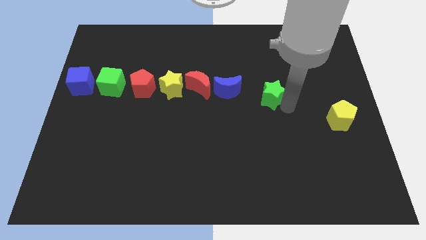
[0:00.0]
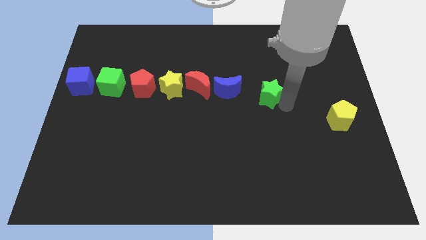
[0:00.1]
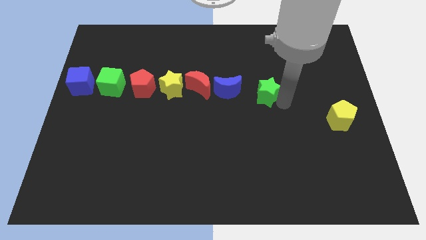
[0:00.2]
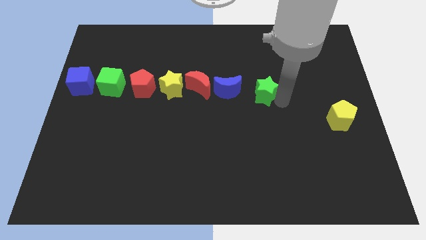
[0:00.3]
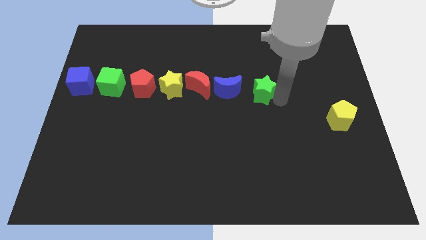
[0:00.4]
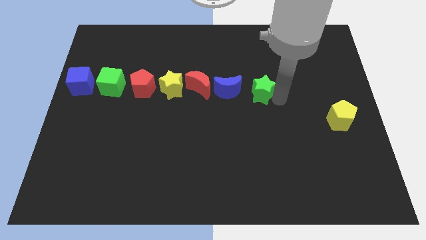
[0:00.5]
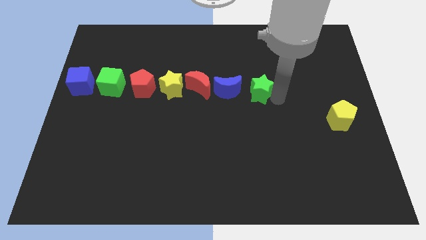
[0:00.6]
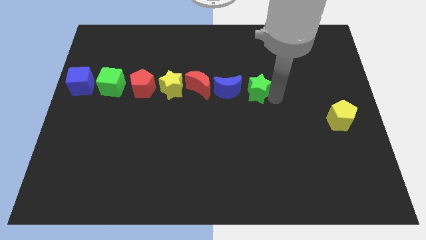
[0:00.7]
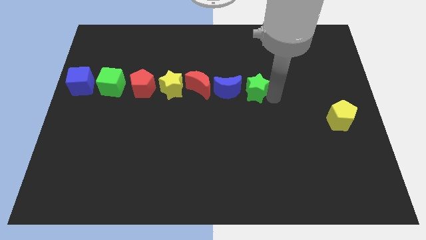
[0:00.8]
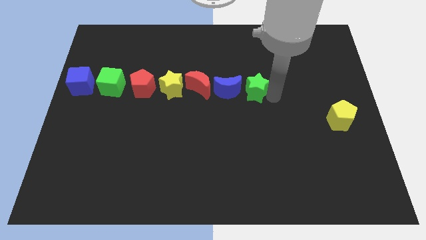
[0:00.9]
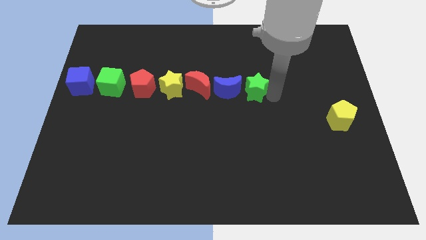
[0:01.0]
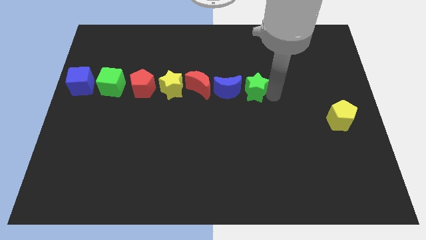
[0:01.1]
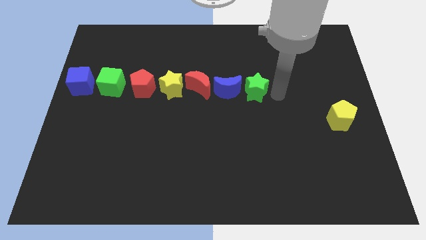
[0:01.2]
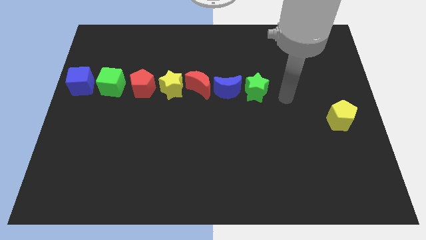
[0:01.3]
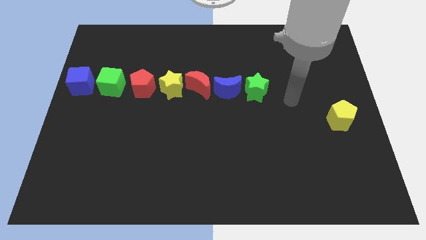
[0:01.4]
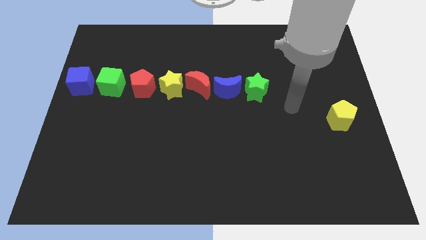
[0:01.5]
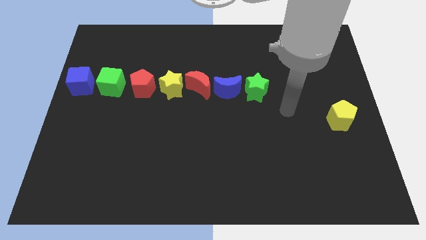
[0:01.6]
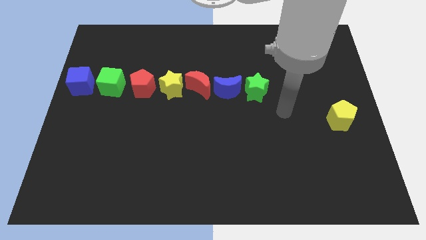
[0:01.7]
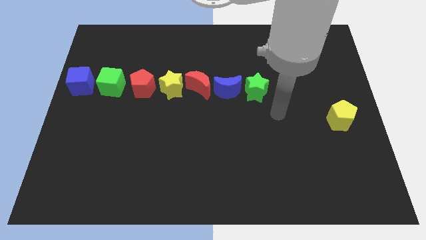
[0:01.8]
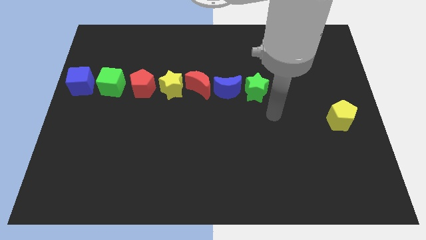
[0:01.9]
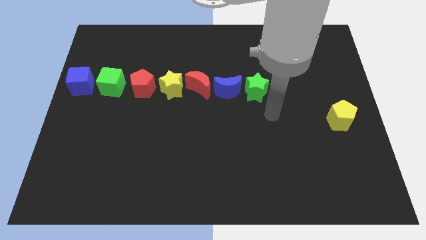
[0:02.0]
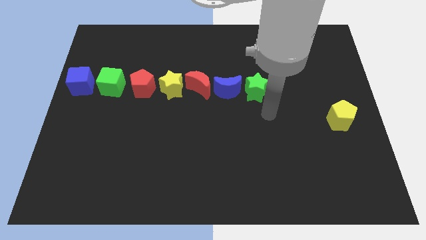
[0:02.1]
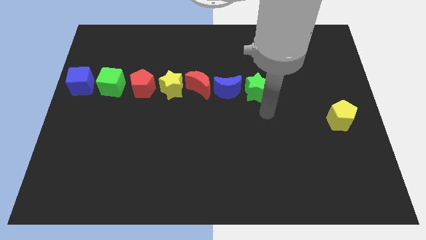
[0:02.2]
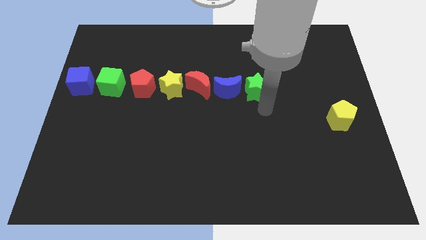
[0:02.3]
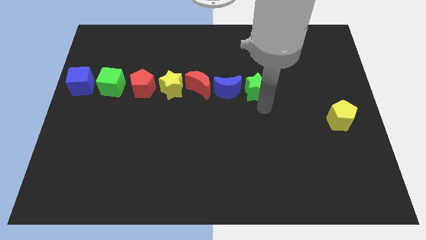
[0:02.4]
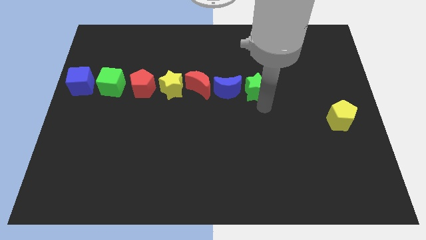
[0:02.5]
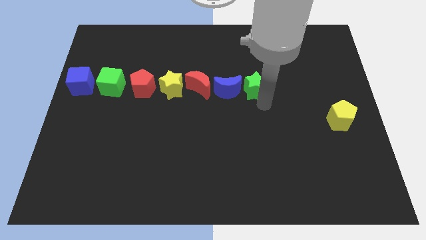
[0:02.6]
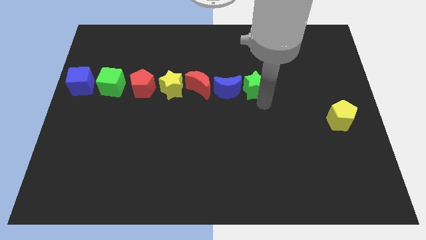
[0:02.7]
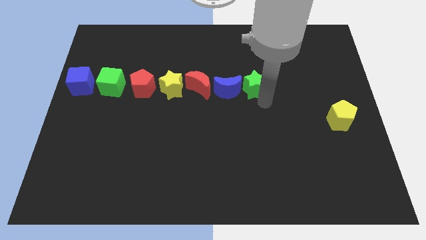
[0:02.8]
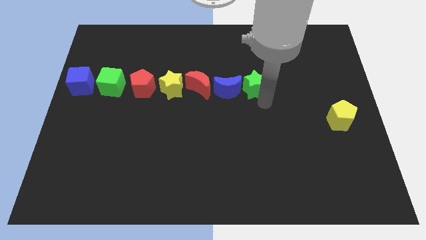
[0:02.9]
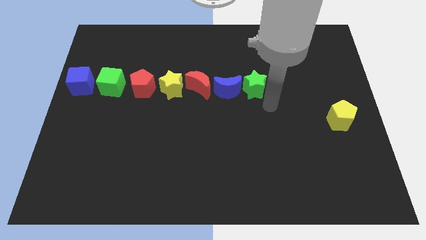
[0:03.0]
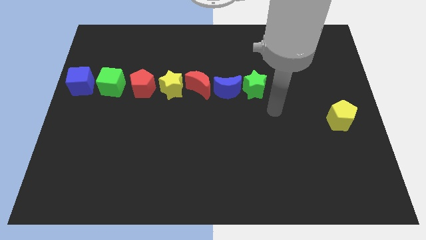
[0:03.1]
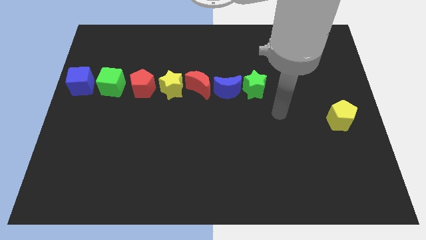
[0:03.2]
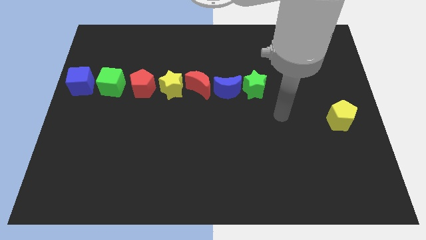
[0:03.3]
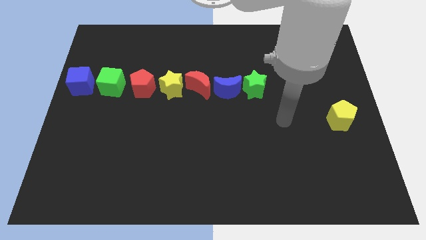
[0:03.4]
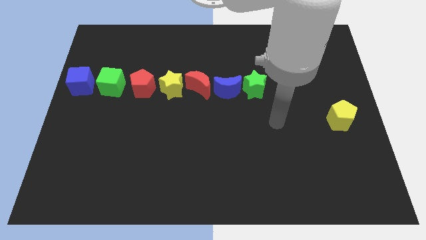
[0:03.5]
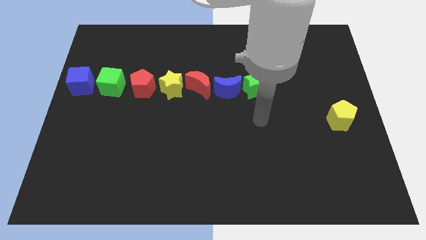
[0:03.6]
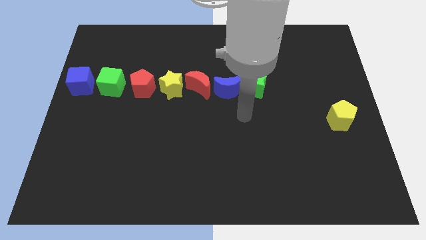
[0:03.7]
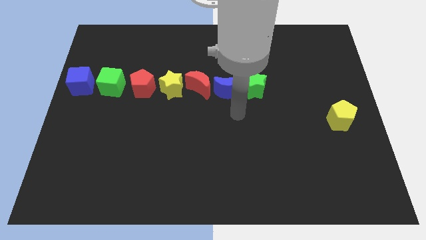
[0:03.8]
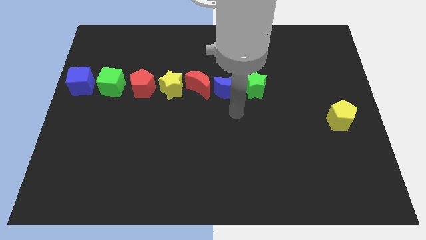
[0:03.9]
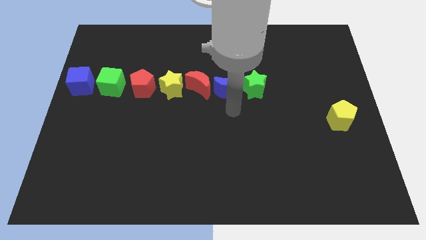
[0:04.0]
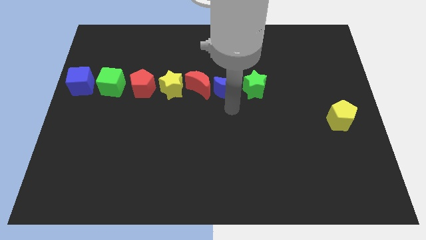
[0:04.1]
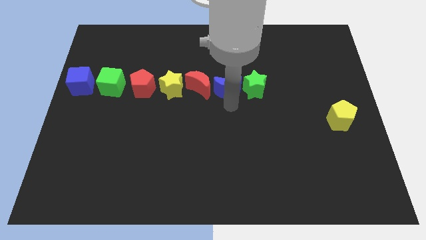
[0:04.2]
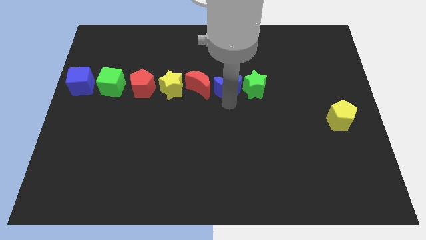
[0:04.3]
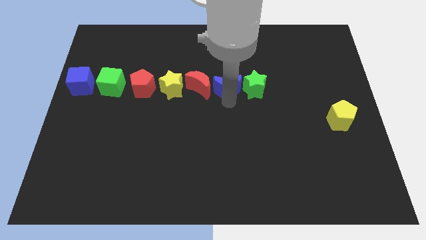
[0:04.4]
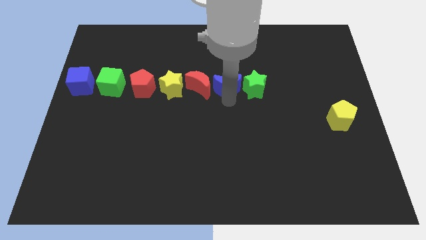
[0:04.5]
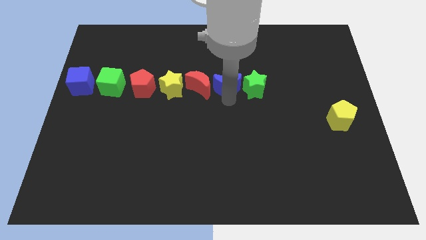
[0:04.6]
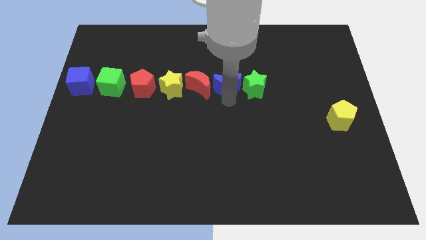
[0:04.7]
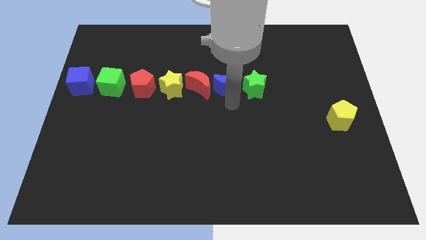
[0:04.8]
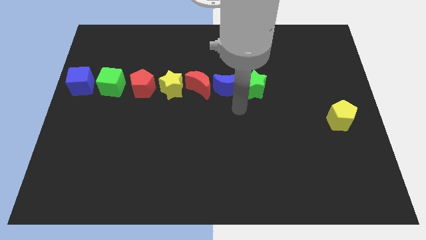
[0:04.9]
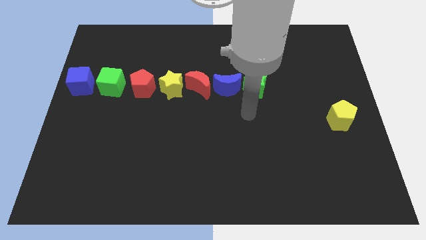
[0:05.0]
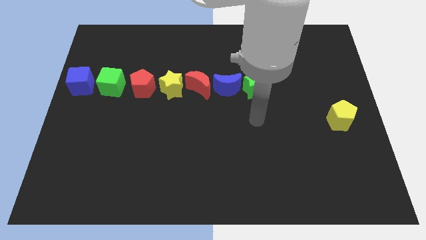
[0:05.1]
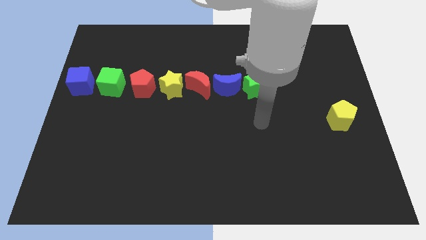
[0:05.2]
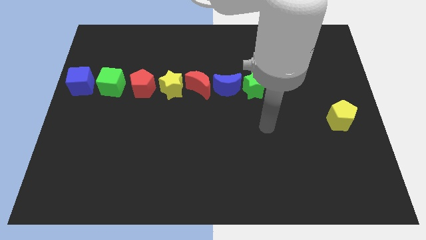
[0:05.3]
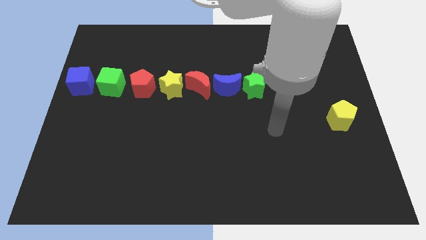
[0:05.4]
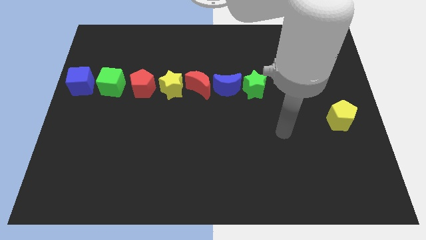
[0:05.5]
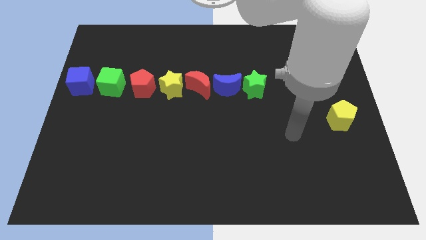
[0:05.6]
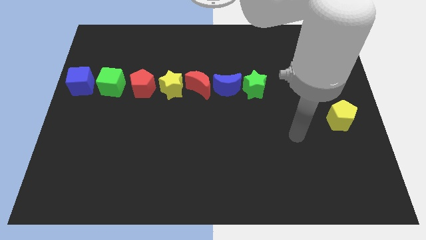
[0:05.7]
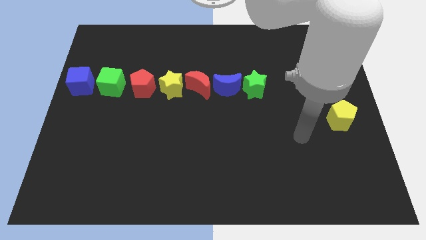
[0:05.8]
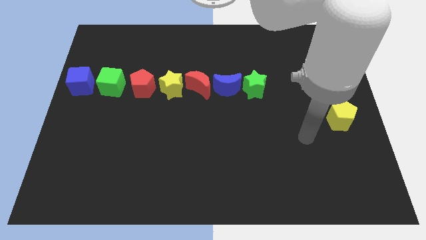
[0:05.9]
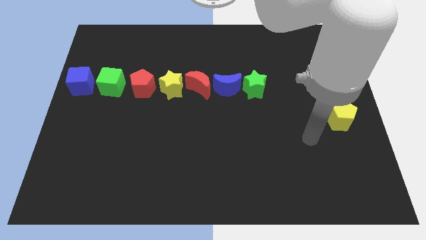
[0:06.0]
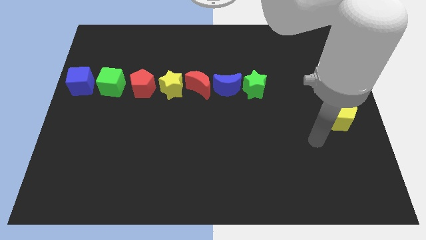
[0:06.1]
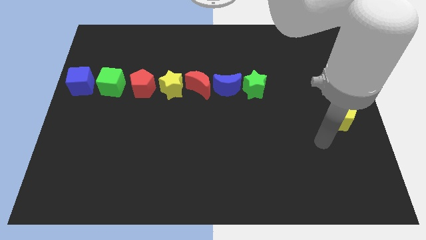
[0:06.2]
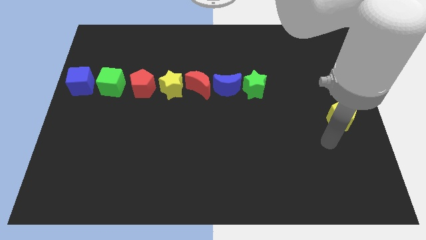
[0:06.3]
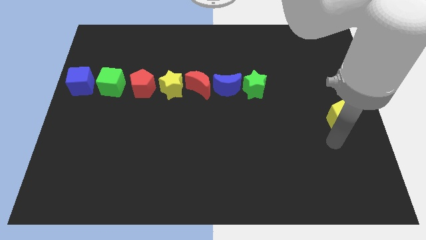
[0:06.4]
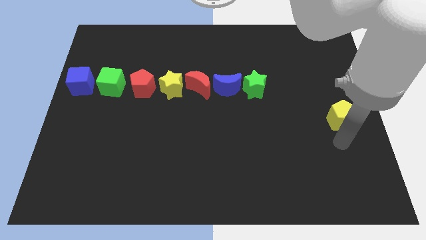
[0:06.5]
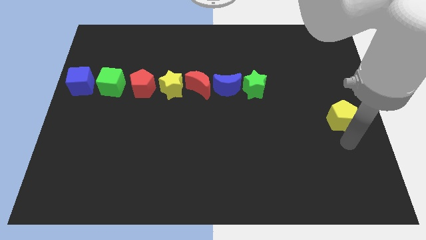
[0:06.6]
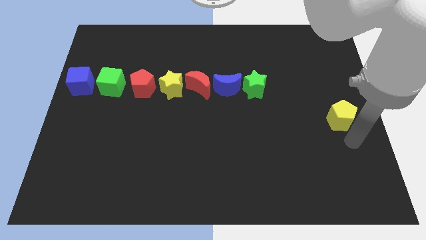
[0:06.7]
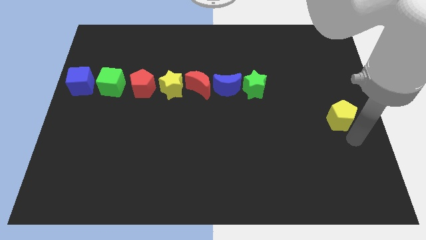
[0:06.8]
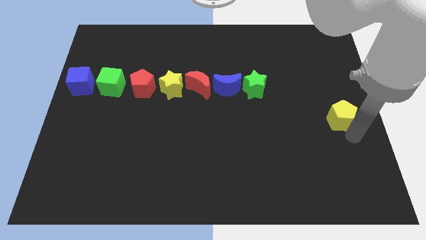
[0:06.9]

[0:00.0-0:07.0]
move the arm to the bottom of the yellow pentagon

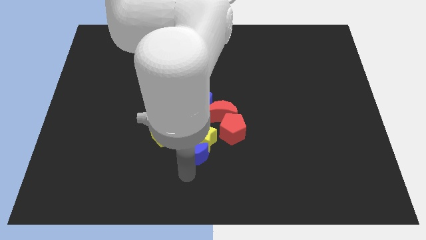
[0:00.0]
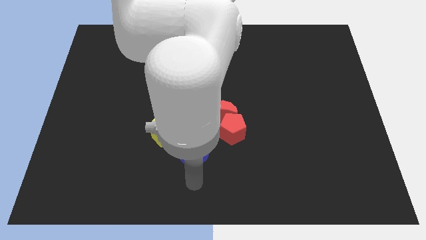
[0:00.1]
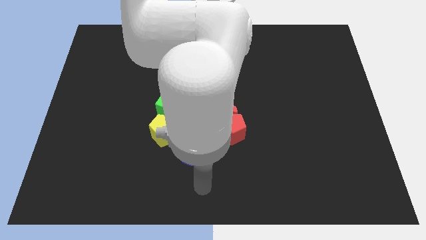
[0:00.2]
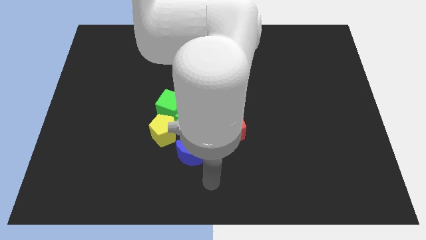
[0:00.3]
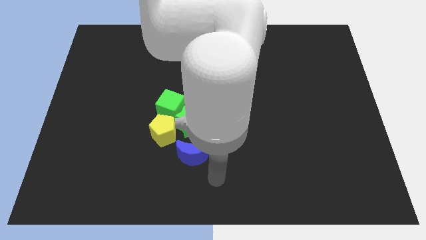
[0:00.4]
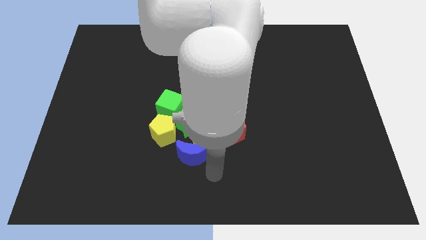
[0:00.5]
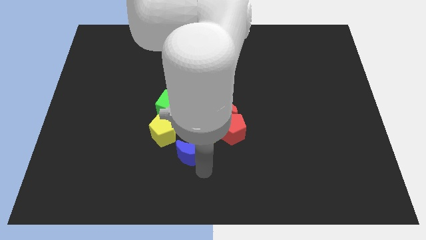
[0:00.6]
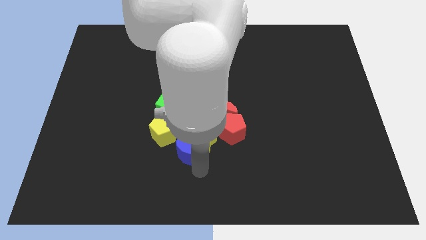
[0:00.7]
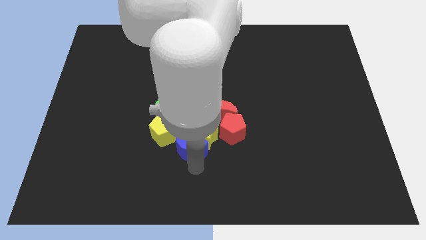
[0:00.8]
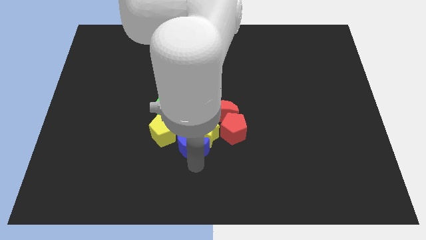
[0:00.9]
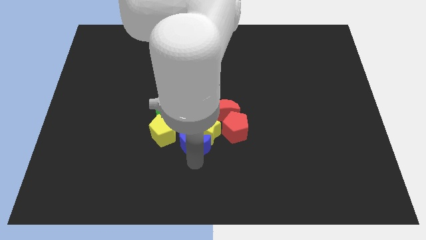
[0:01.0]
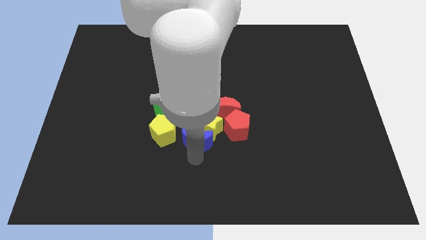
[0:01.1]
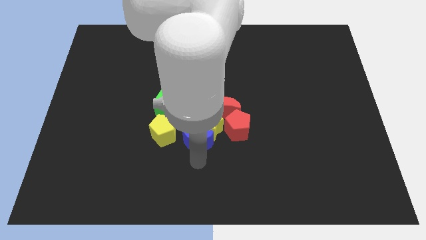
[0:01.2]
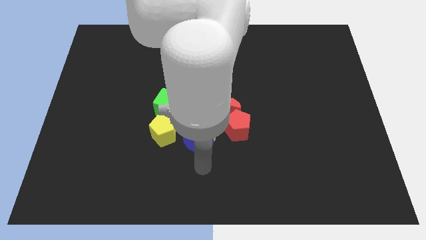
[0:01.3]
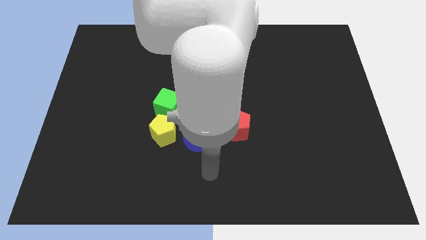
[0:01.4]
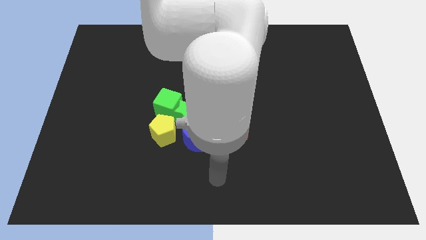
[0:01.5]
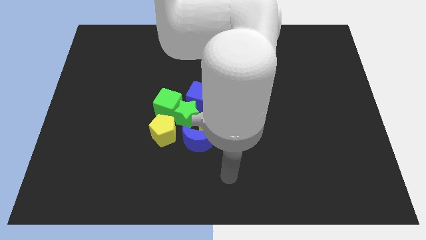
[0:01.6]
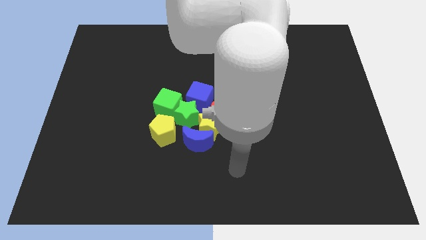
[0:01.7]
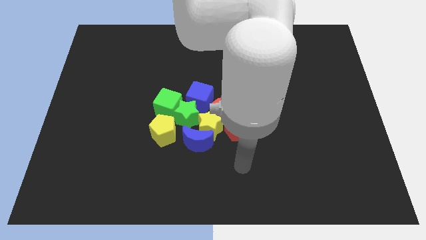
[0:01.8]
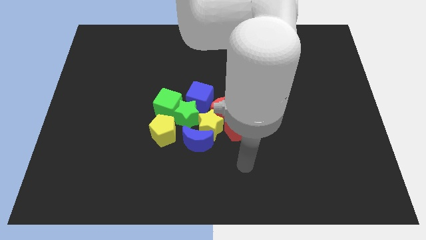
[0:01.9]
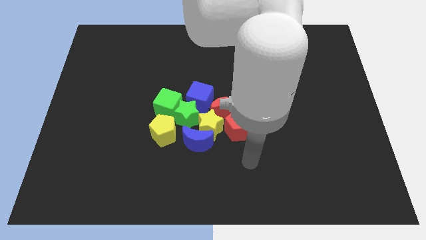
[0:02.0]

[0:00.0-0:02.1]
push the blue crescent to the group of blocks
